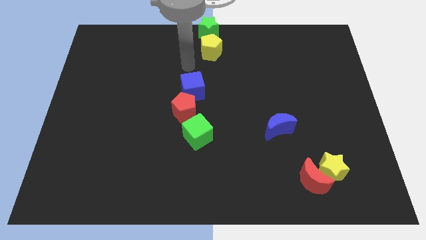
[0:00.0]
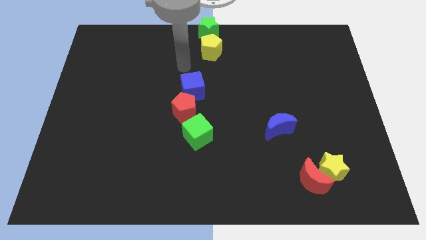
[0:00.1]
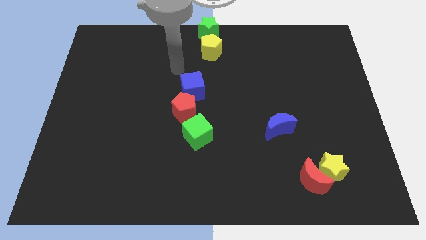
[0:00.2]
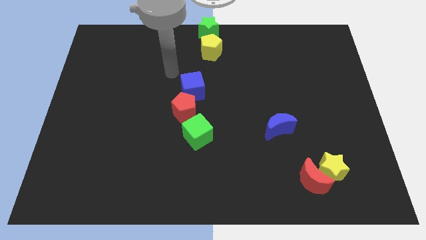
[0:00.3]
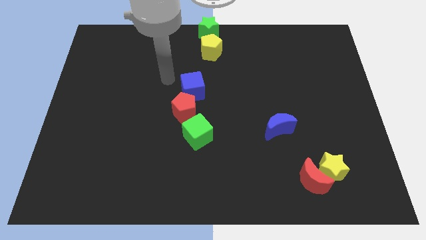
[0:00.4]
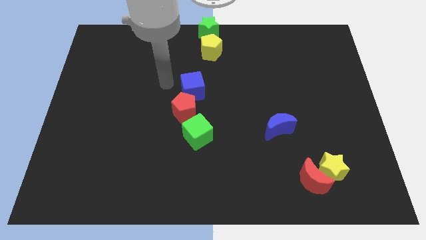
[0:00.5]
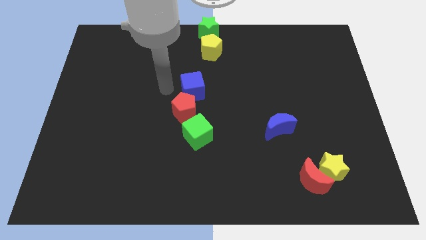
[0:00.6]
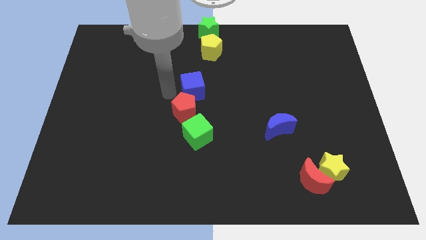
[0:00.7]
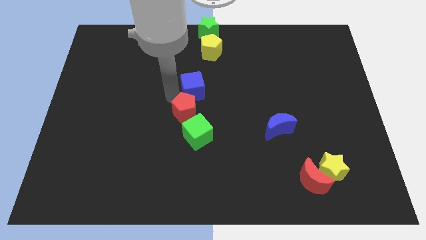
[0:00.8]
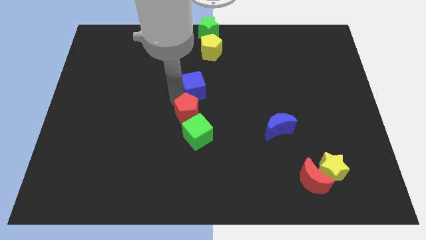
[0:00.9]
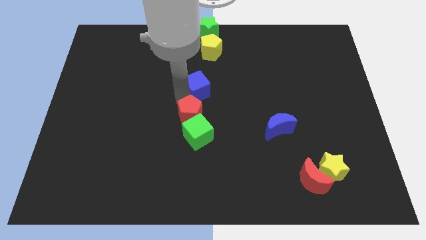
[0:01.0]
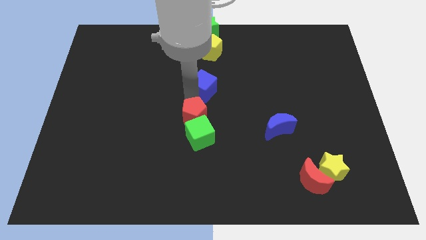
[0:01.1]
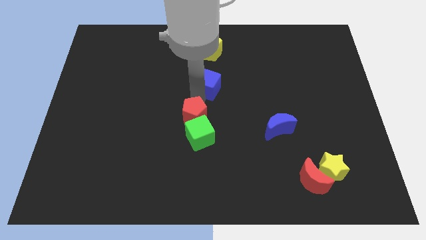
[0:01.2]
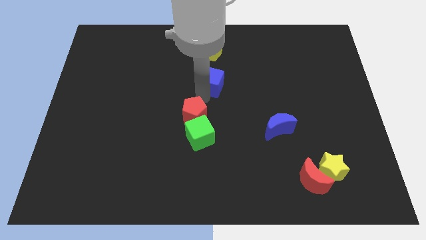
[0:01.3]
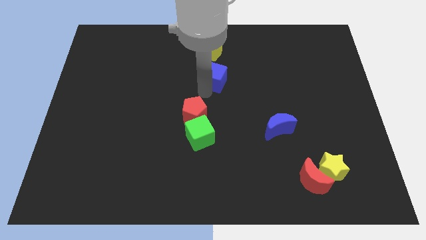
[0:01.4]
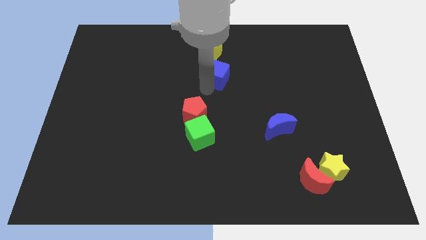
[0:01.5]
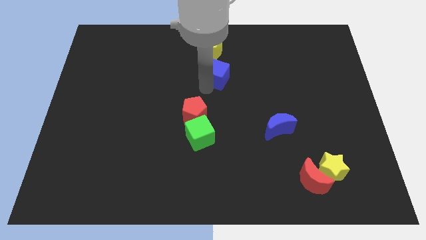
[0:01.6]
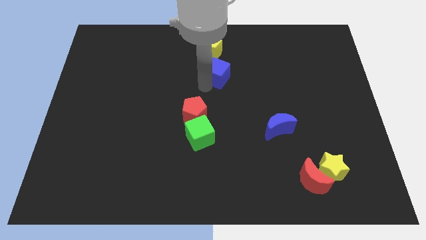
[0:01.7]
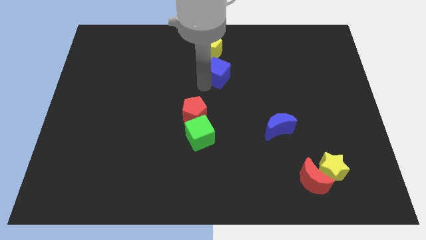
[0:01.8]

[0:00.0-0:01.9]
move the blue cune away from the red pentagon

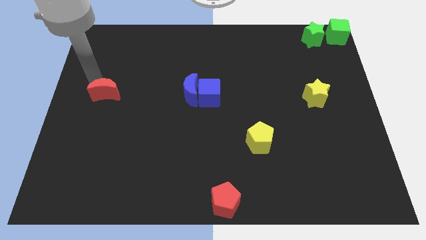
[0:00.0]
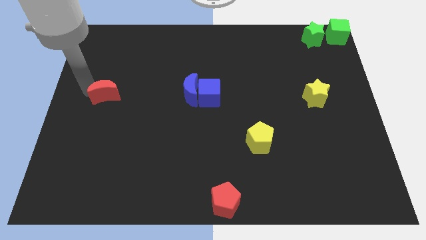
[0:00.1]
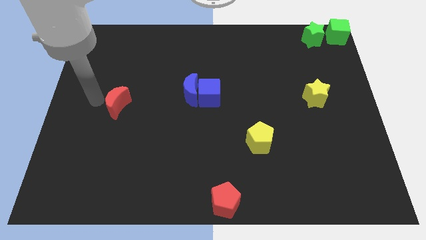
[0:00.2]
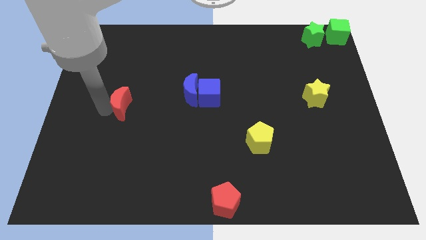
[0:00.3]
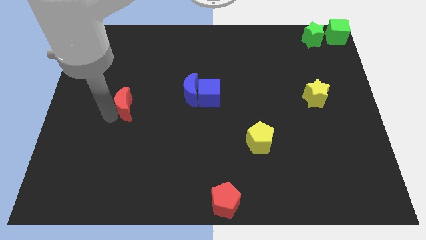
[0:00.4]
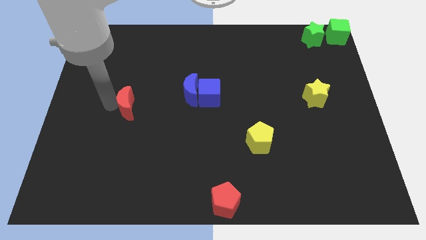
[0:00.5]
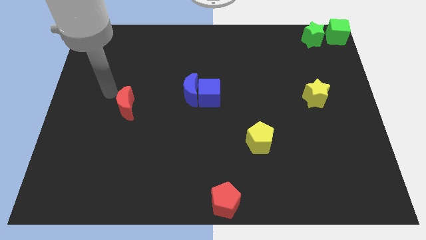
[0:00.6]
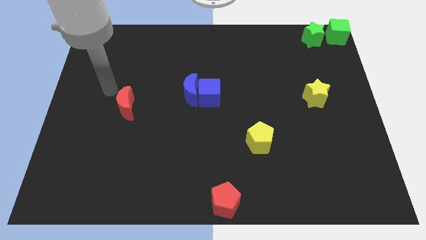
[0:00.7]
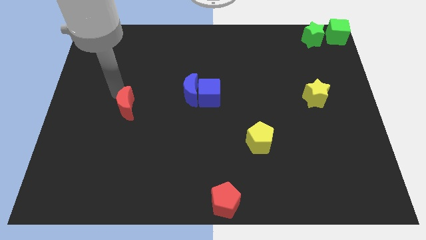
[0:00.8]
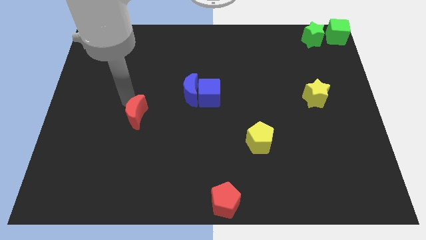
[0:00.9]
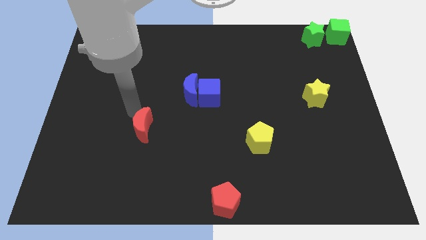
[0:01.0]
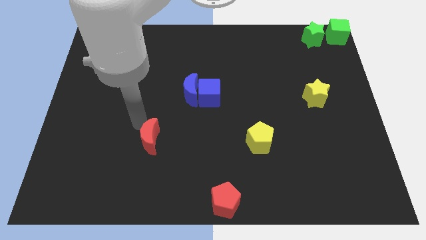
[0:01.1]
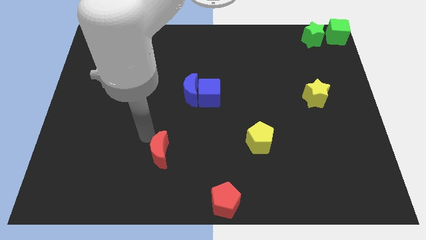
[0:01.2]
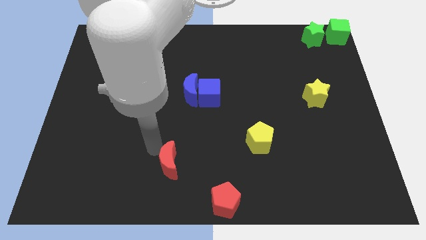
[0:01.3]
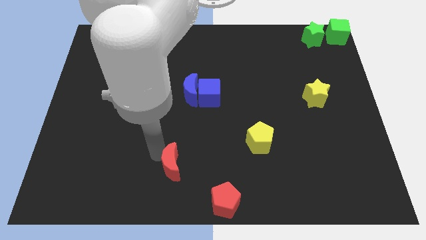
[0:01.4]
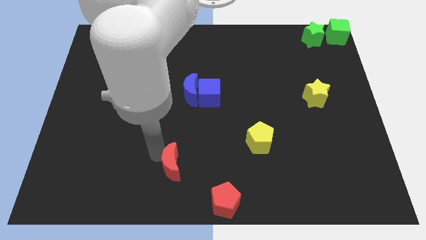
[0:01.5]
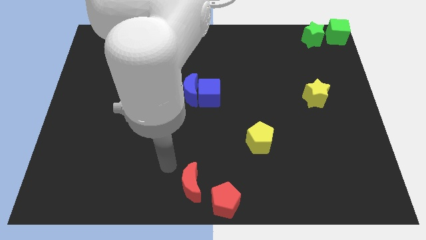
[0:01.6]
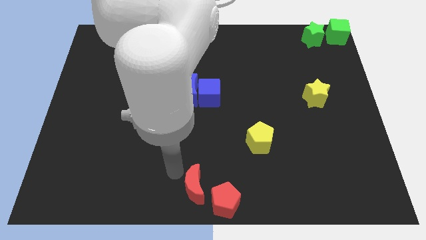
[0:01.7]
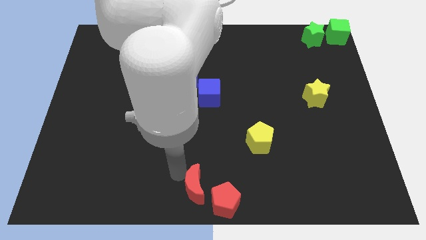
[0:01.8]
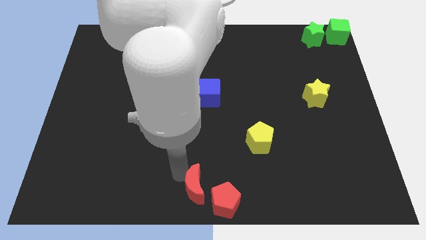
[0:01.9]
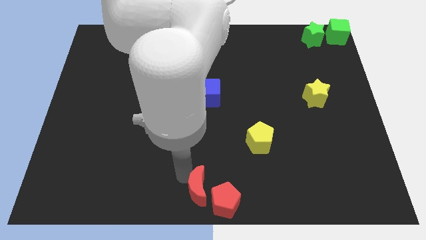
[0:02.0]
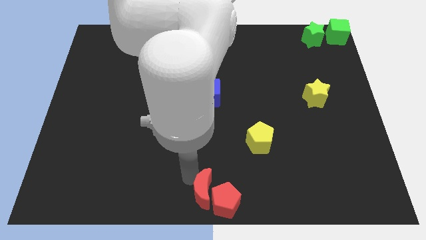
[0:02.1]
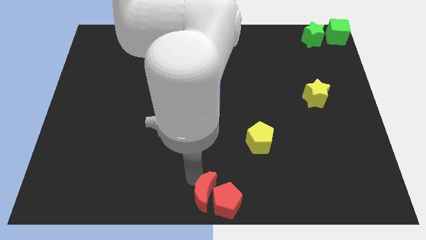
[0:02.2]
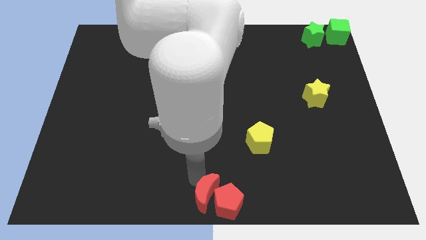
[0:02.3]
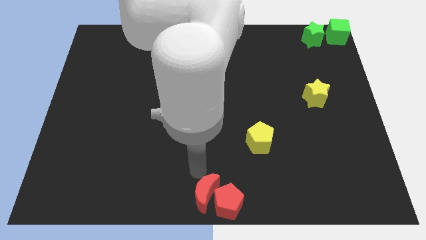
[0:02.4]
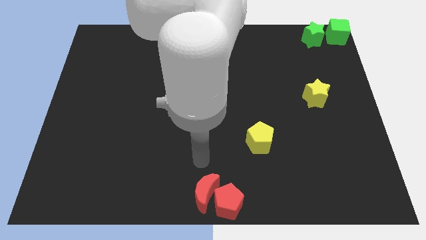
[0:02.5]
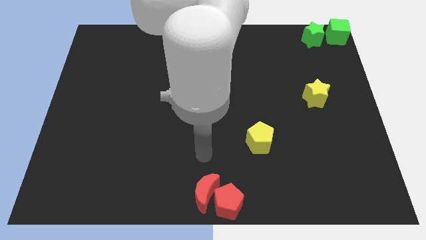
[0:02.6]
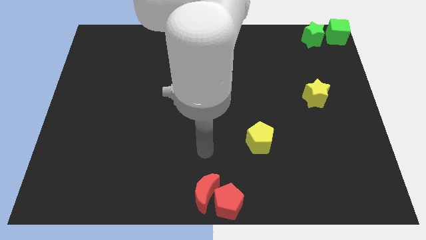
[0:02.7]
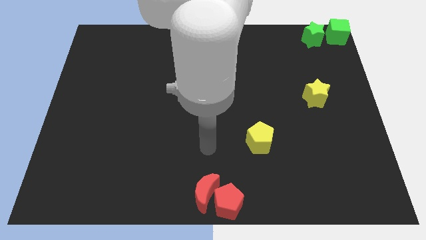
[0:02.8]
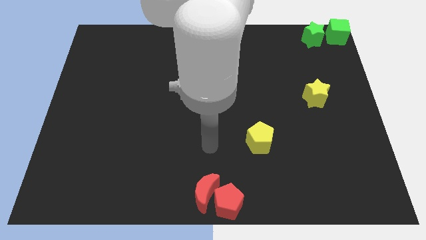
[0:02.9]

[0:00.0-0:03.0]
group up the red blocks at the bottom center of the board

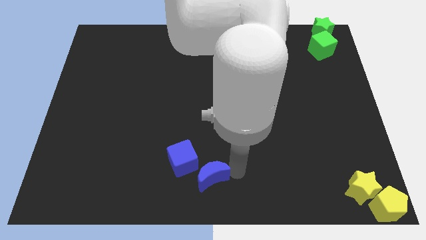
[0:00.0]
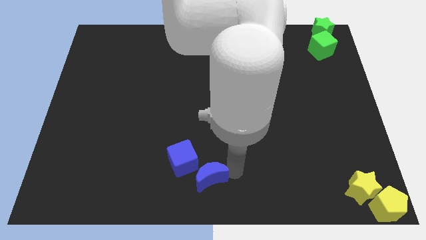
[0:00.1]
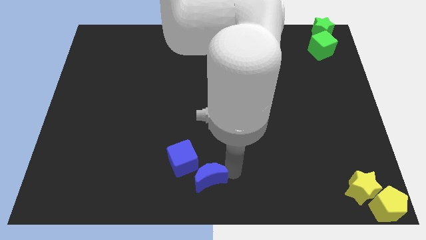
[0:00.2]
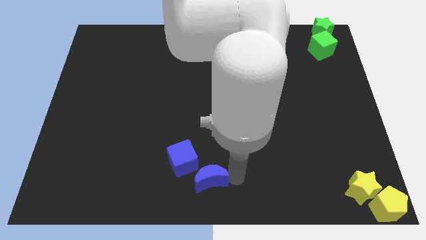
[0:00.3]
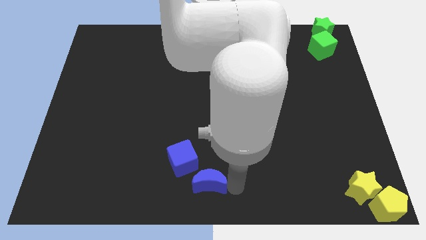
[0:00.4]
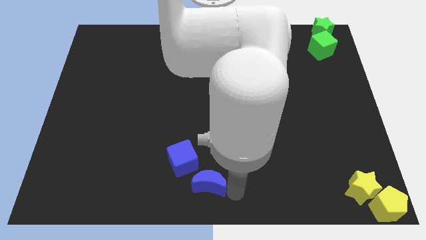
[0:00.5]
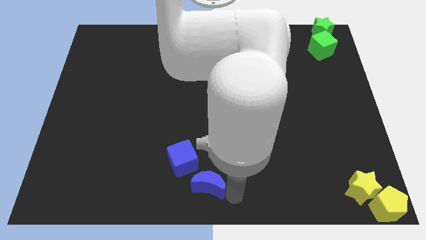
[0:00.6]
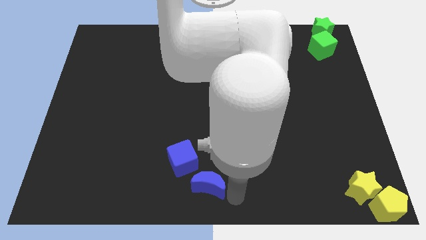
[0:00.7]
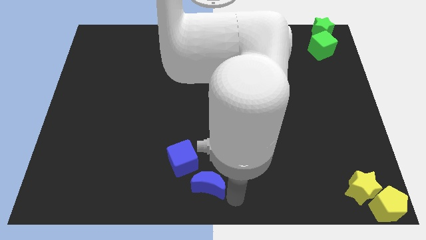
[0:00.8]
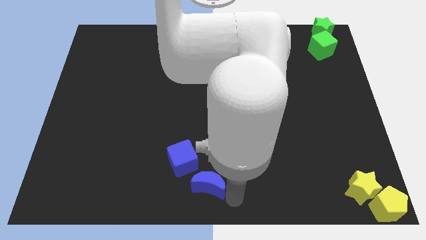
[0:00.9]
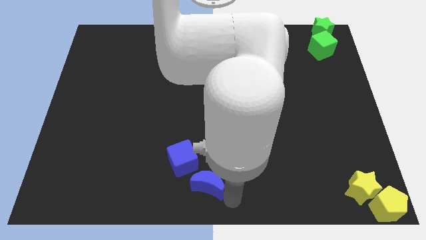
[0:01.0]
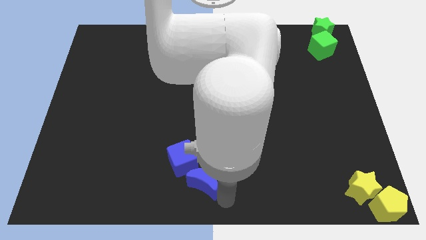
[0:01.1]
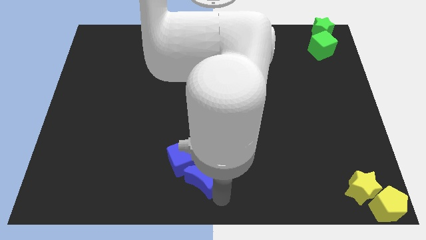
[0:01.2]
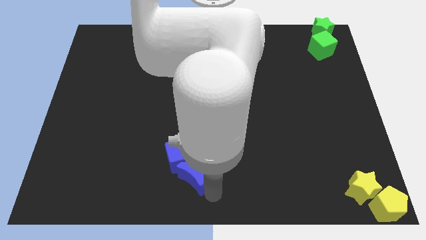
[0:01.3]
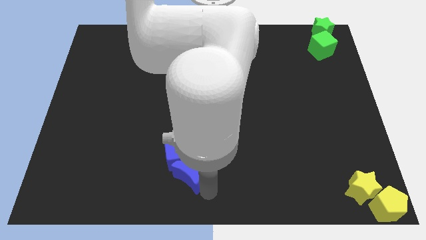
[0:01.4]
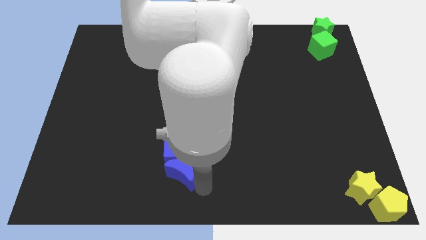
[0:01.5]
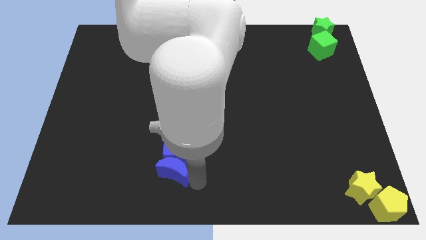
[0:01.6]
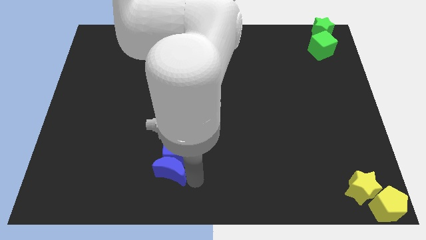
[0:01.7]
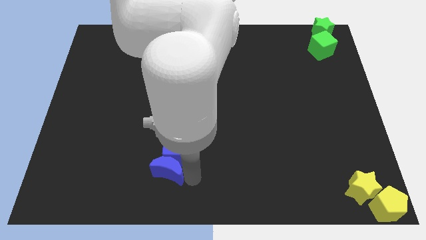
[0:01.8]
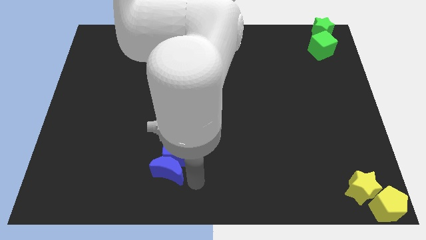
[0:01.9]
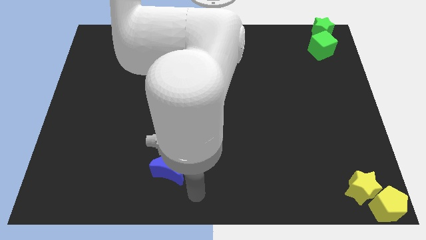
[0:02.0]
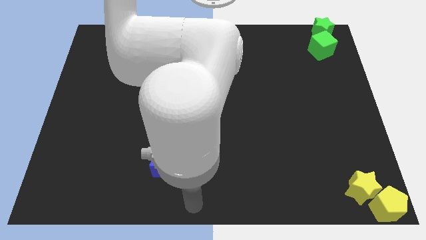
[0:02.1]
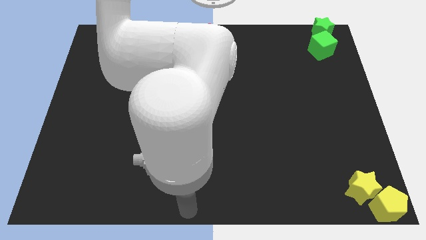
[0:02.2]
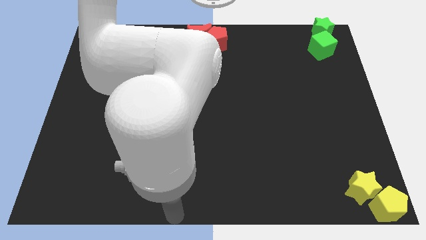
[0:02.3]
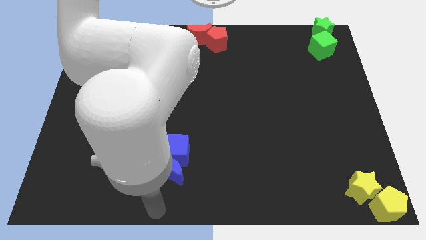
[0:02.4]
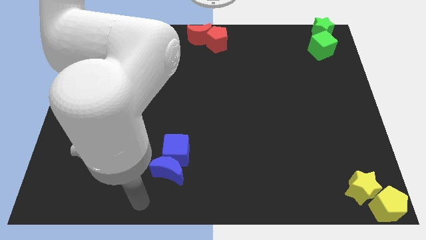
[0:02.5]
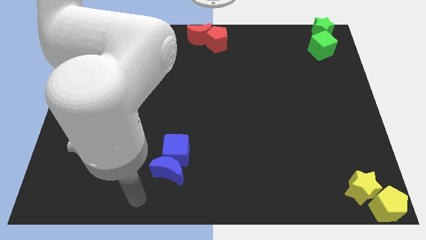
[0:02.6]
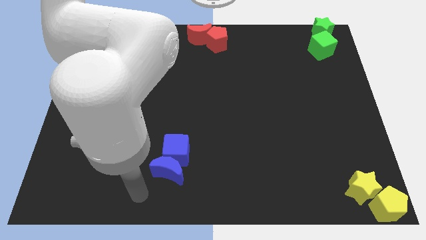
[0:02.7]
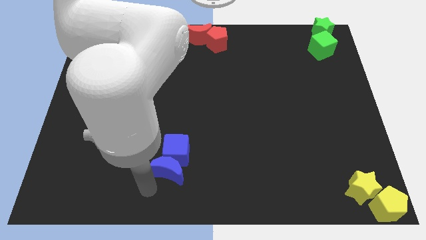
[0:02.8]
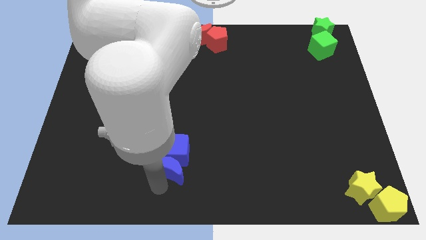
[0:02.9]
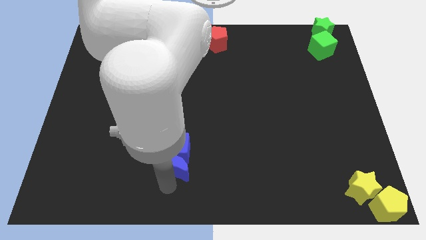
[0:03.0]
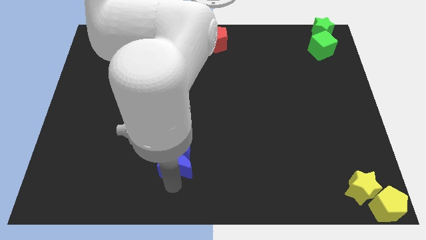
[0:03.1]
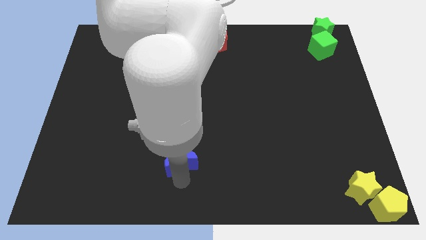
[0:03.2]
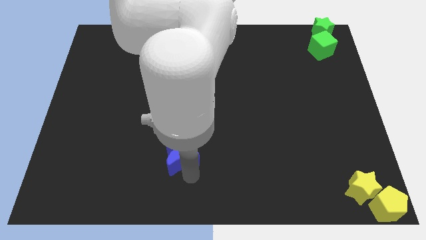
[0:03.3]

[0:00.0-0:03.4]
move the blue blocks to the top side

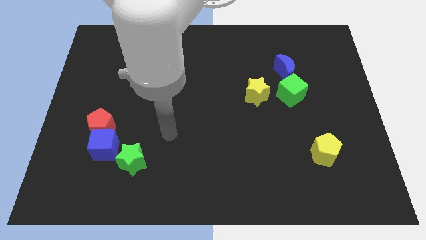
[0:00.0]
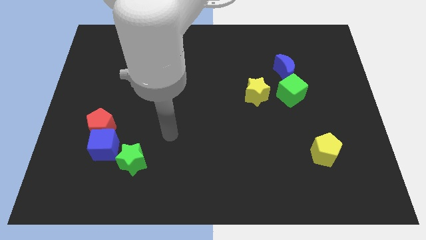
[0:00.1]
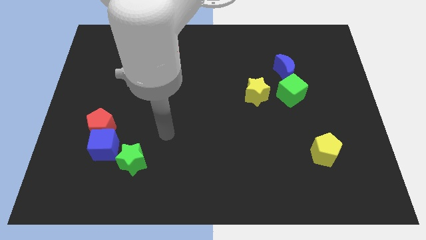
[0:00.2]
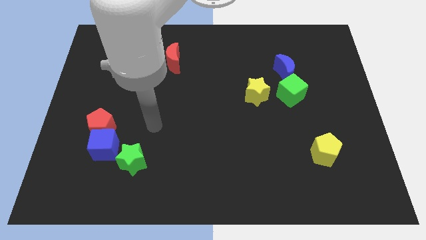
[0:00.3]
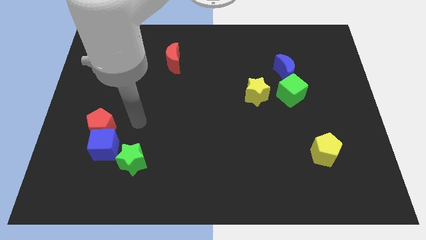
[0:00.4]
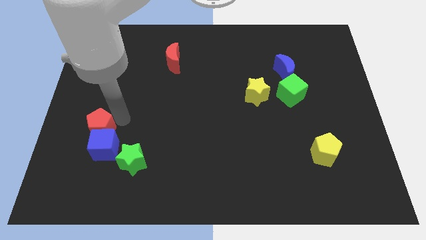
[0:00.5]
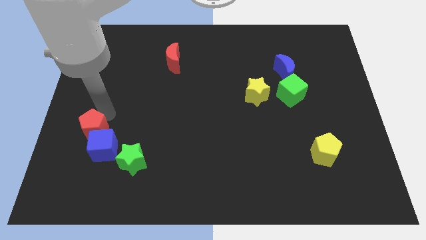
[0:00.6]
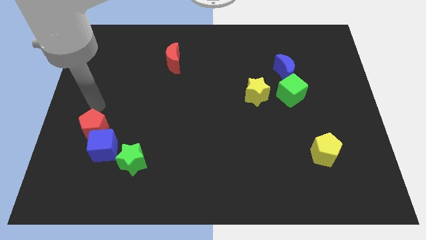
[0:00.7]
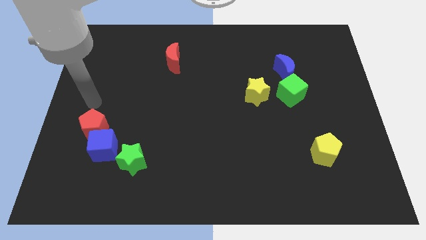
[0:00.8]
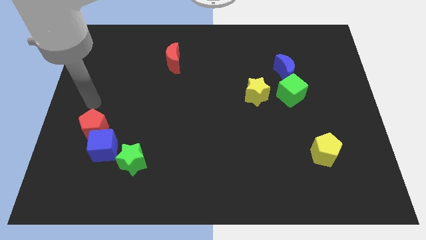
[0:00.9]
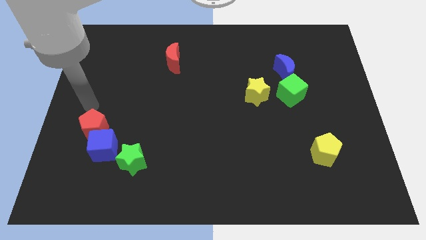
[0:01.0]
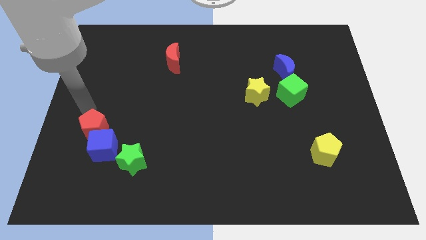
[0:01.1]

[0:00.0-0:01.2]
move your arm towards the center left side of the board
